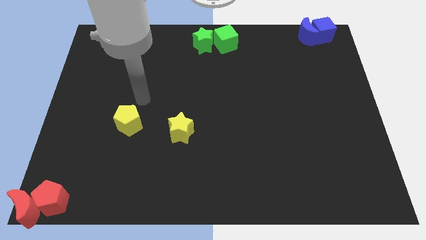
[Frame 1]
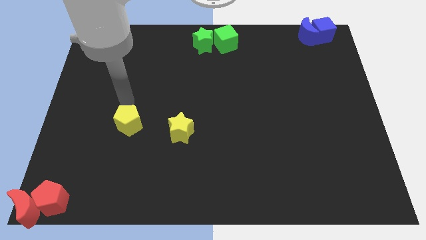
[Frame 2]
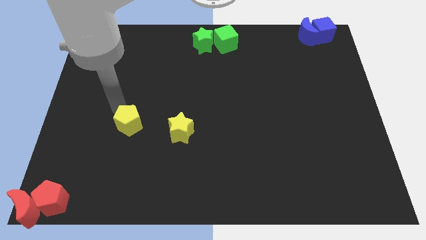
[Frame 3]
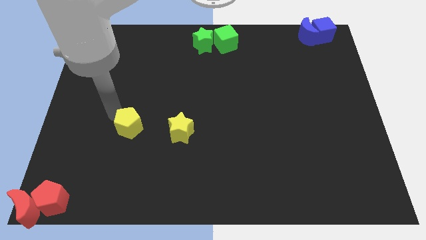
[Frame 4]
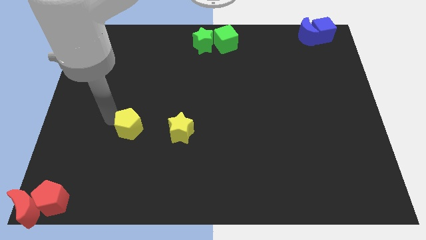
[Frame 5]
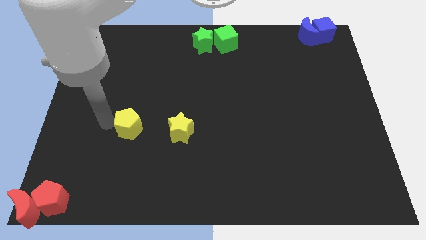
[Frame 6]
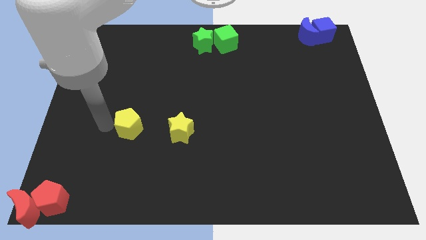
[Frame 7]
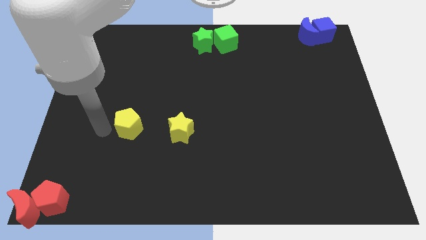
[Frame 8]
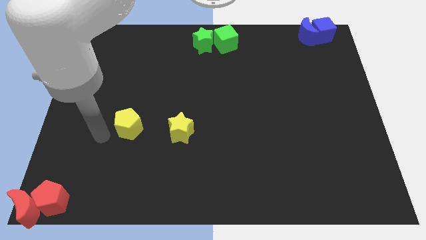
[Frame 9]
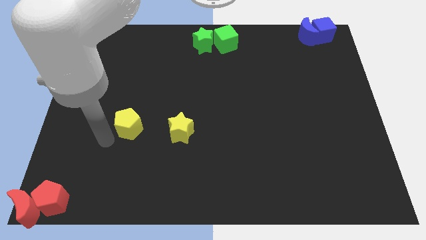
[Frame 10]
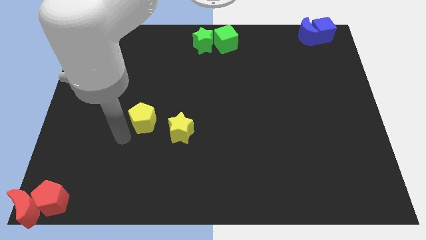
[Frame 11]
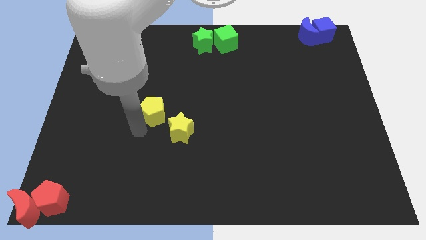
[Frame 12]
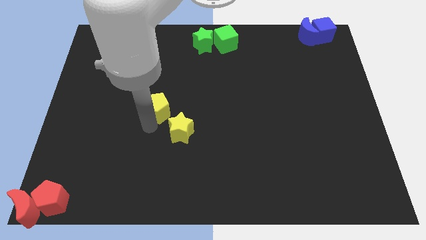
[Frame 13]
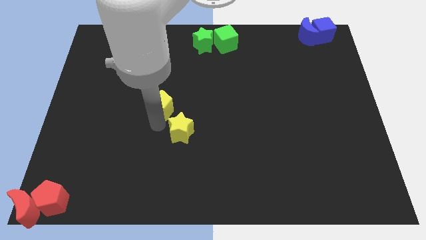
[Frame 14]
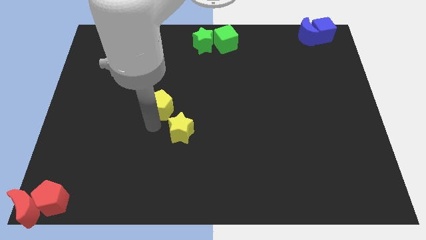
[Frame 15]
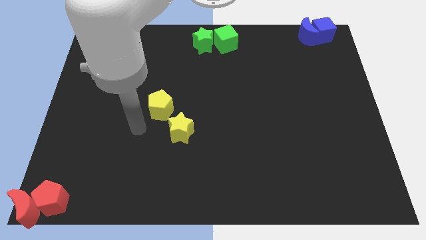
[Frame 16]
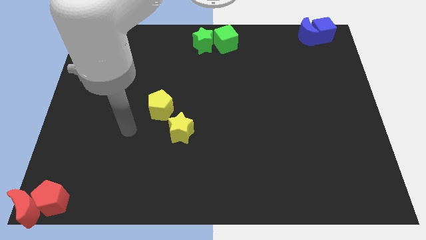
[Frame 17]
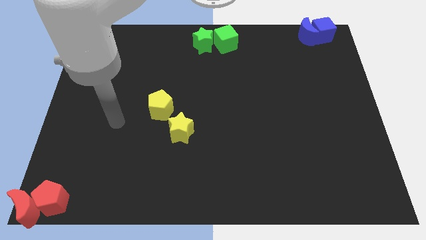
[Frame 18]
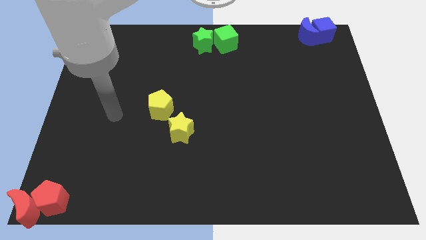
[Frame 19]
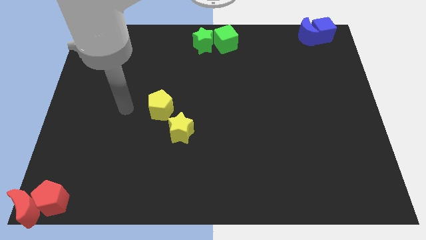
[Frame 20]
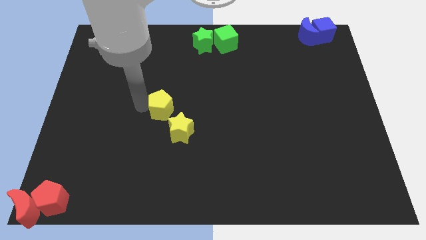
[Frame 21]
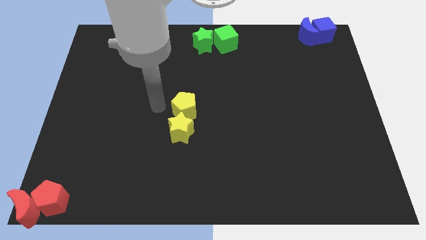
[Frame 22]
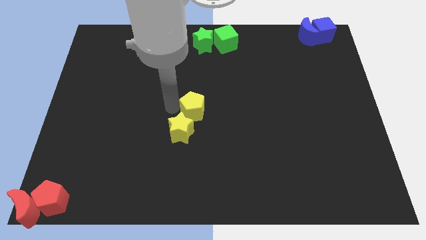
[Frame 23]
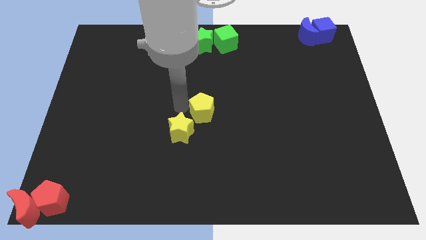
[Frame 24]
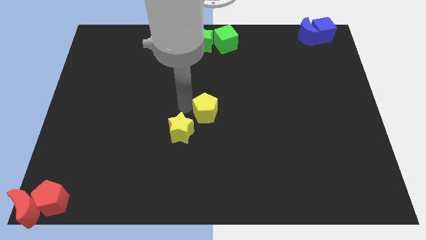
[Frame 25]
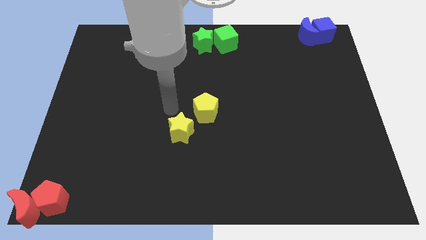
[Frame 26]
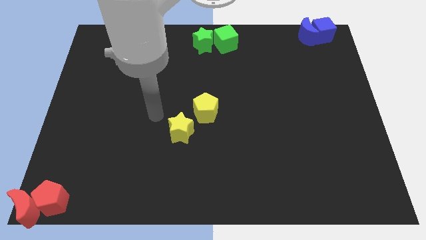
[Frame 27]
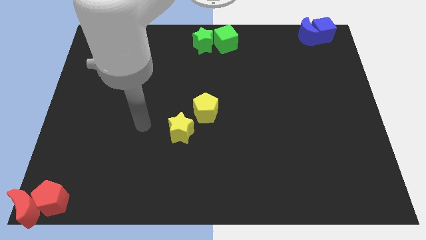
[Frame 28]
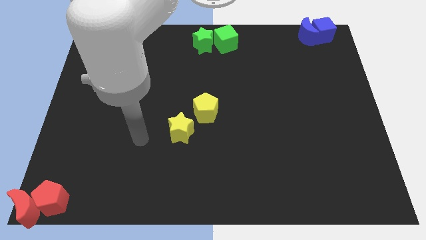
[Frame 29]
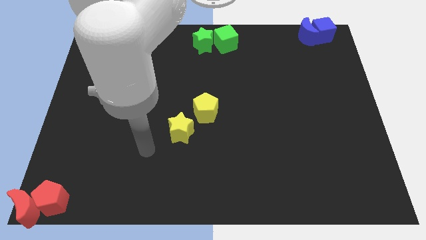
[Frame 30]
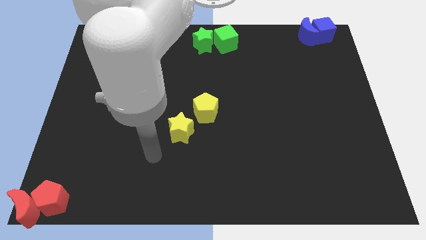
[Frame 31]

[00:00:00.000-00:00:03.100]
move the yellow pentagon below the green star

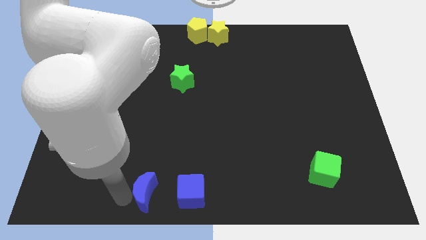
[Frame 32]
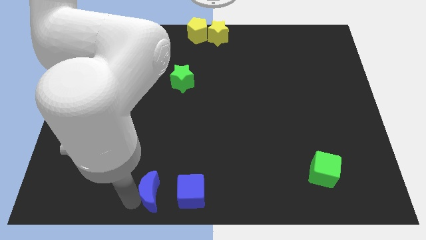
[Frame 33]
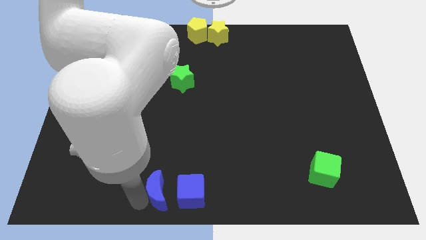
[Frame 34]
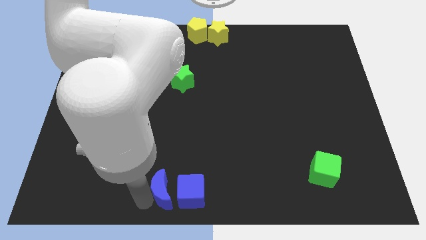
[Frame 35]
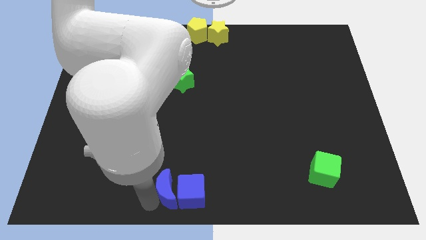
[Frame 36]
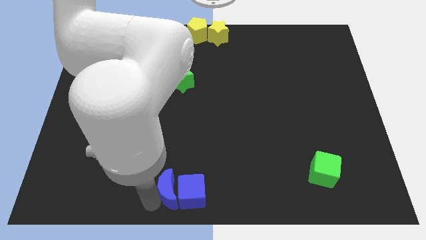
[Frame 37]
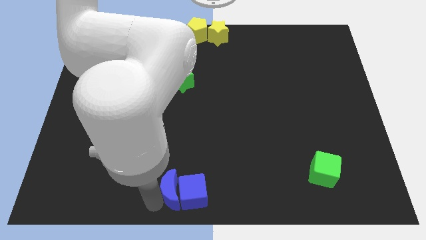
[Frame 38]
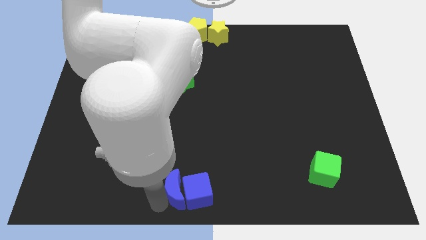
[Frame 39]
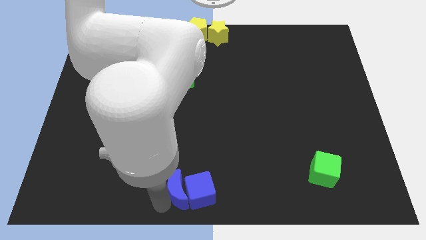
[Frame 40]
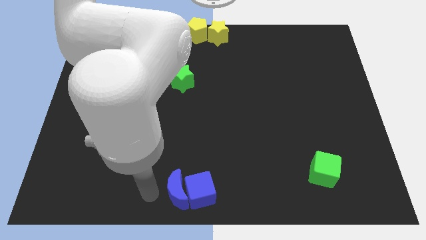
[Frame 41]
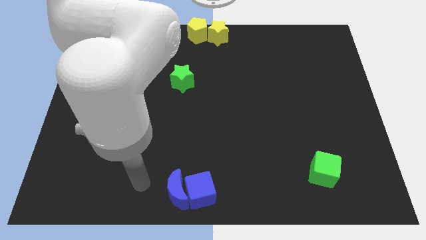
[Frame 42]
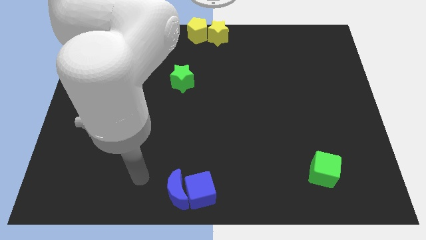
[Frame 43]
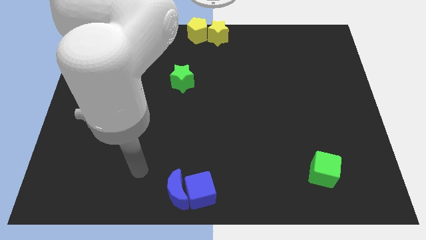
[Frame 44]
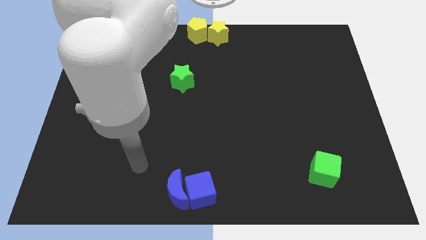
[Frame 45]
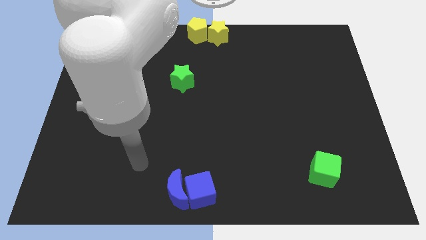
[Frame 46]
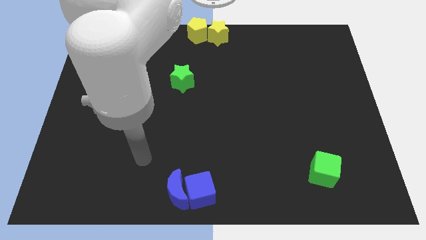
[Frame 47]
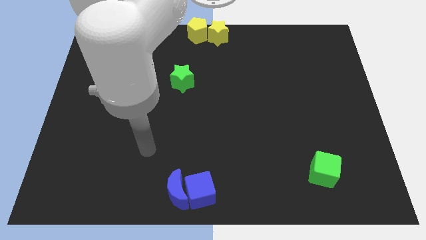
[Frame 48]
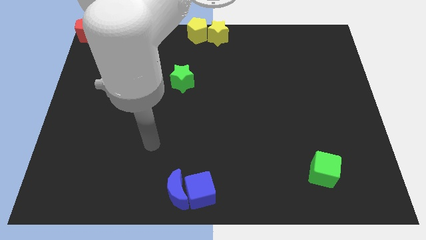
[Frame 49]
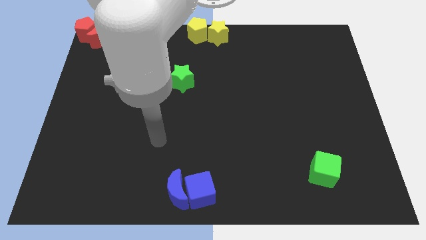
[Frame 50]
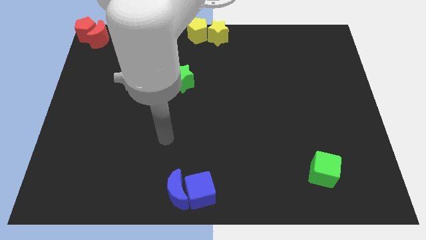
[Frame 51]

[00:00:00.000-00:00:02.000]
move the blue moon into the blue cube

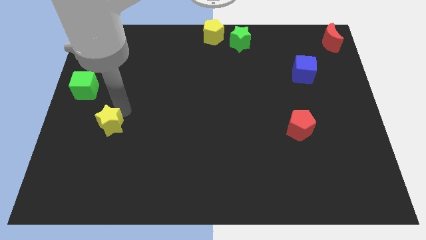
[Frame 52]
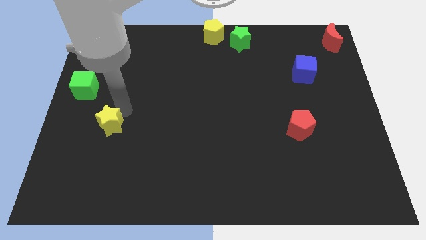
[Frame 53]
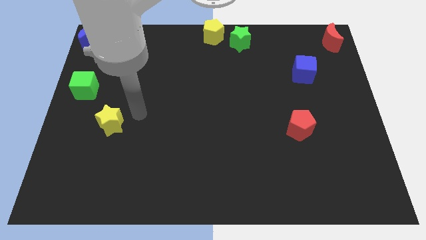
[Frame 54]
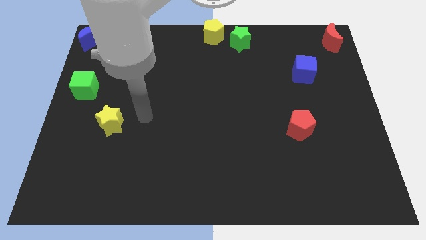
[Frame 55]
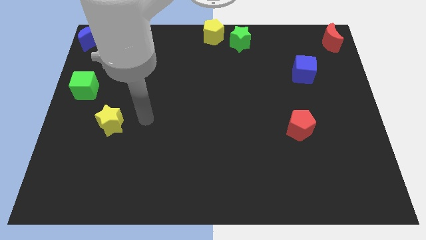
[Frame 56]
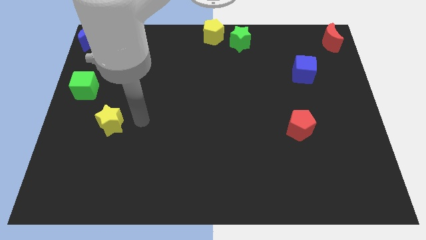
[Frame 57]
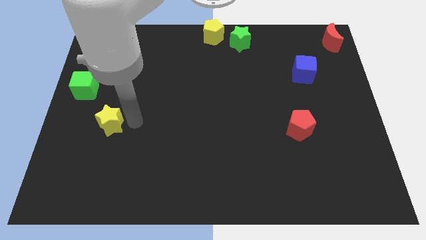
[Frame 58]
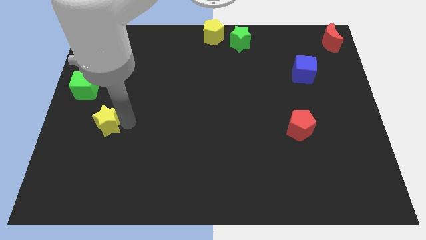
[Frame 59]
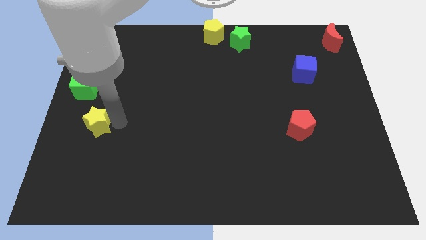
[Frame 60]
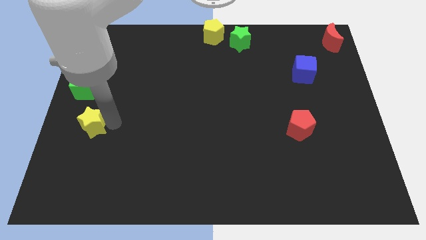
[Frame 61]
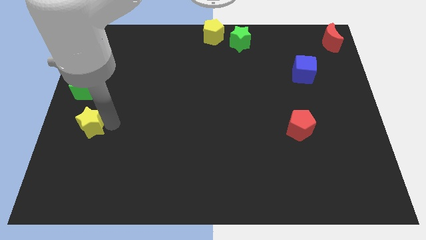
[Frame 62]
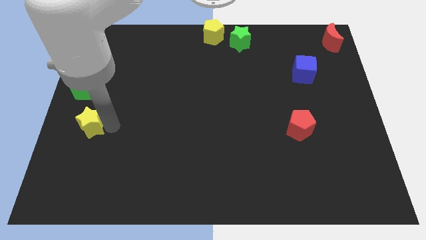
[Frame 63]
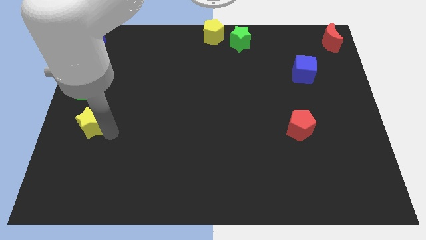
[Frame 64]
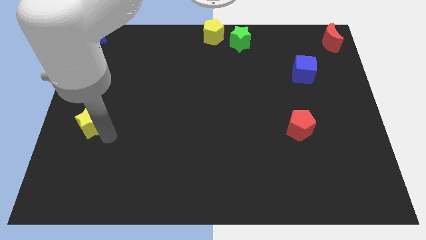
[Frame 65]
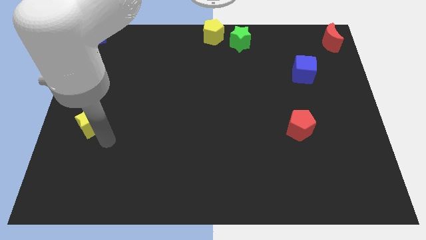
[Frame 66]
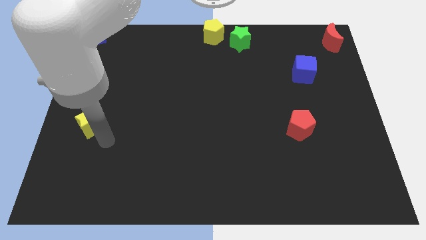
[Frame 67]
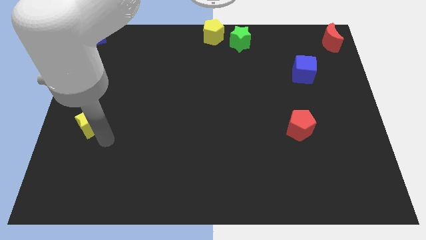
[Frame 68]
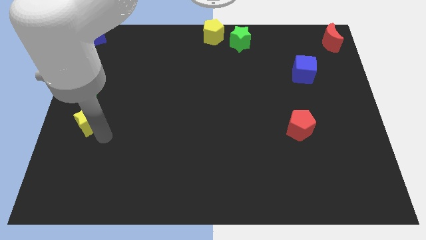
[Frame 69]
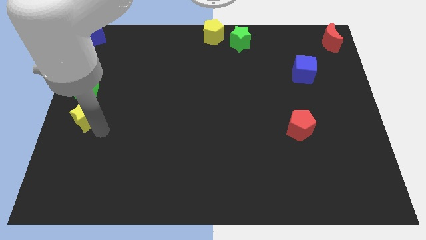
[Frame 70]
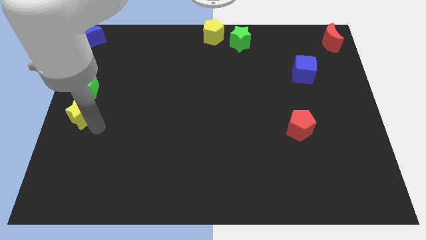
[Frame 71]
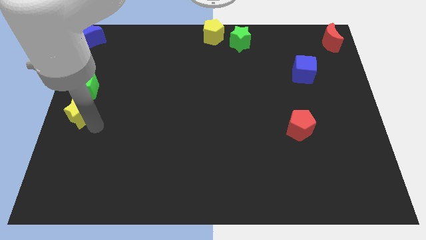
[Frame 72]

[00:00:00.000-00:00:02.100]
move the yellow star below the green cube

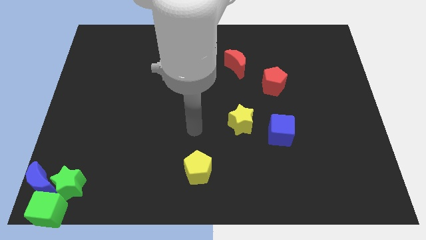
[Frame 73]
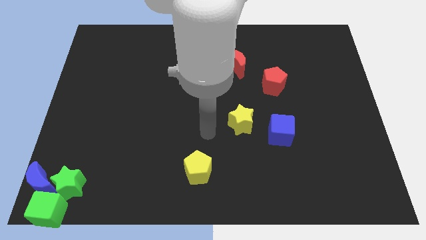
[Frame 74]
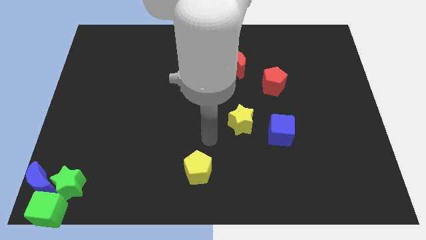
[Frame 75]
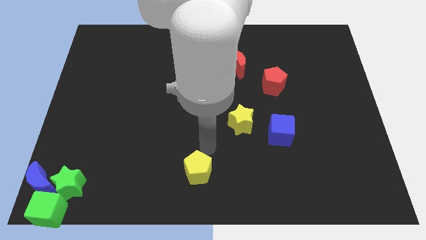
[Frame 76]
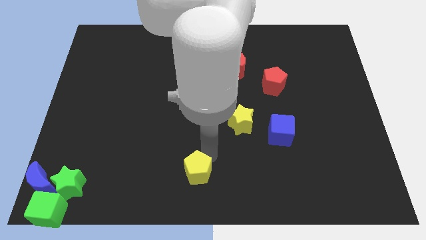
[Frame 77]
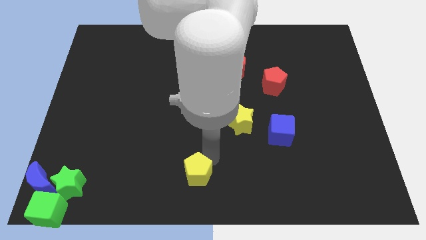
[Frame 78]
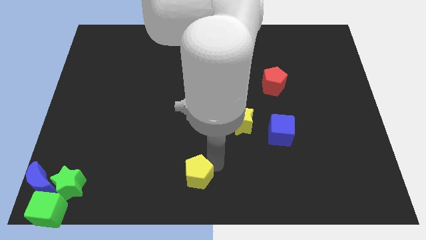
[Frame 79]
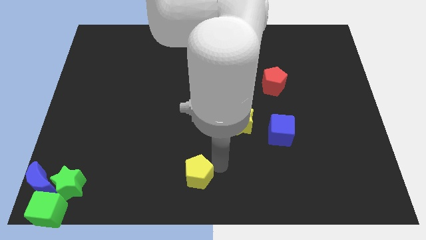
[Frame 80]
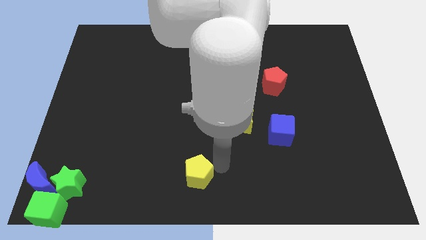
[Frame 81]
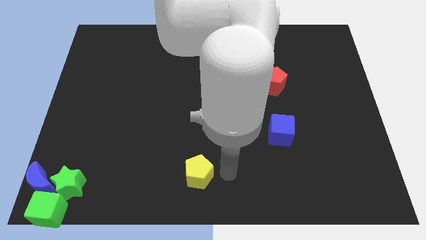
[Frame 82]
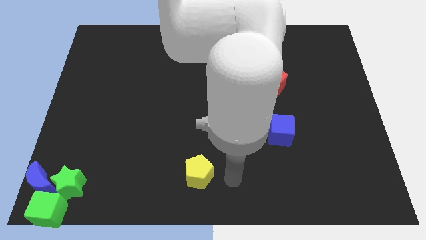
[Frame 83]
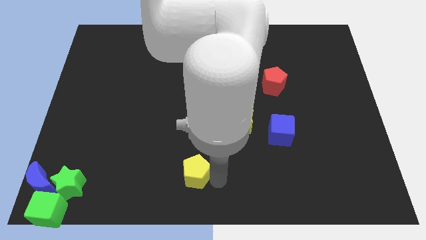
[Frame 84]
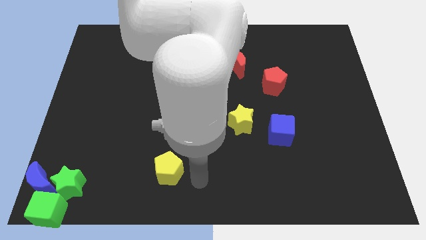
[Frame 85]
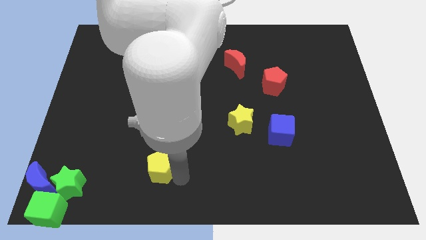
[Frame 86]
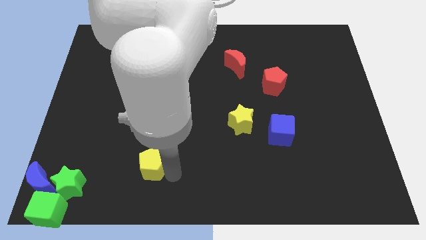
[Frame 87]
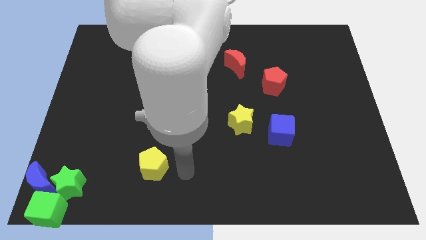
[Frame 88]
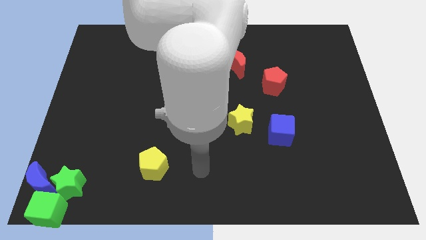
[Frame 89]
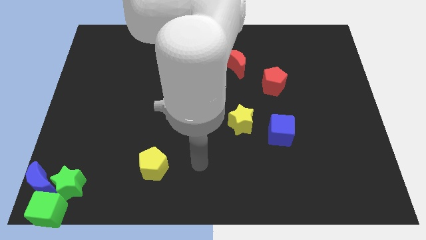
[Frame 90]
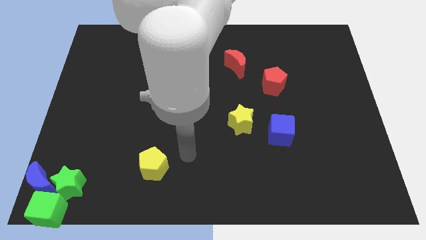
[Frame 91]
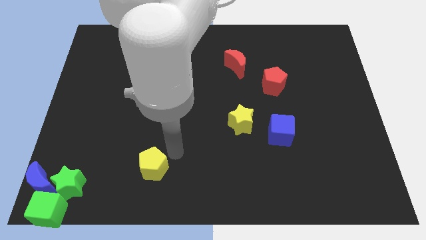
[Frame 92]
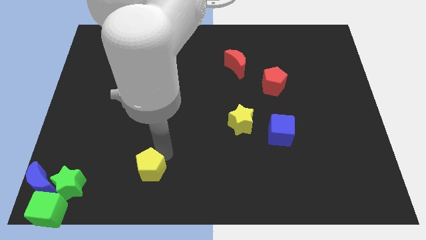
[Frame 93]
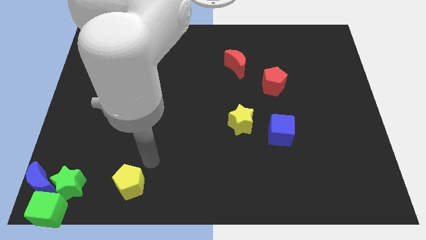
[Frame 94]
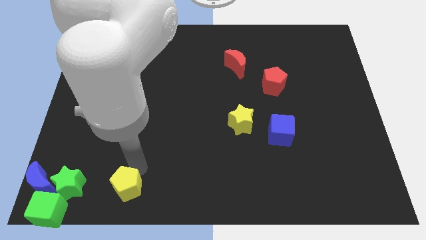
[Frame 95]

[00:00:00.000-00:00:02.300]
move the yellow pentagon to the right side of the green star
